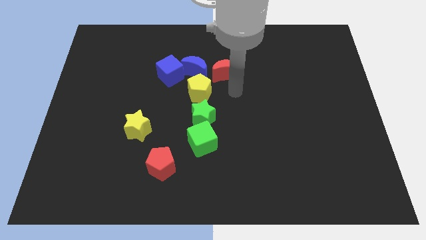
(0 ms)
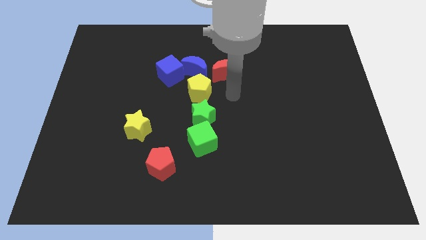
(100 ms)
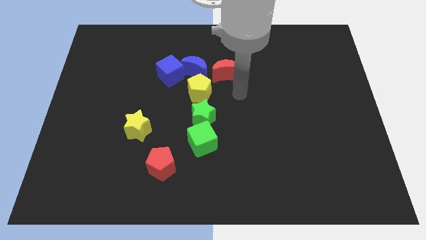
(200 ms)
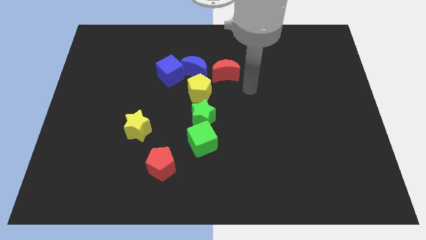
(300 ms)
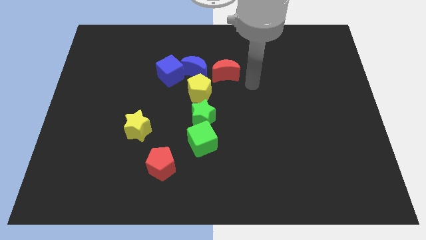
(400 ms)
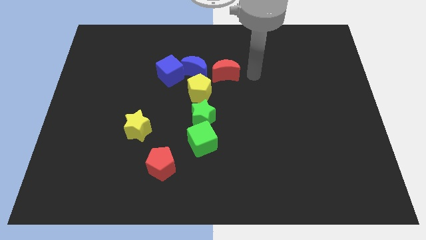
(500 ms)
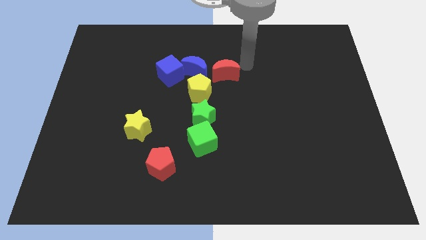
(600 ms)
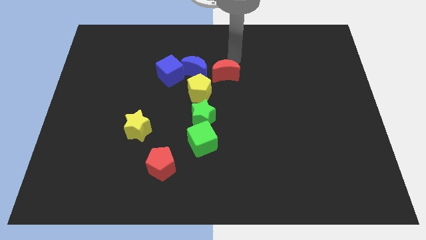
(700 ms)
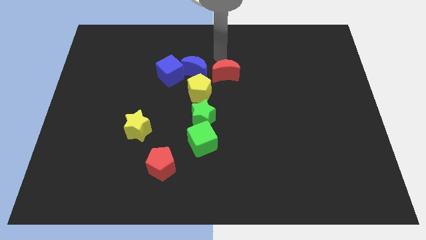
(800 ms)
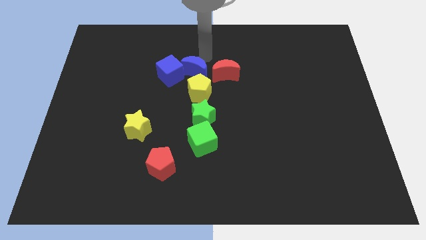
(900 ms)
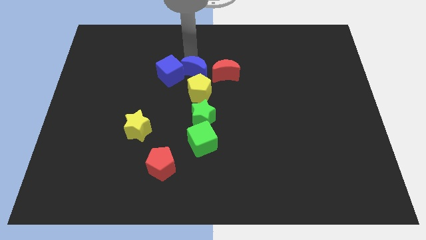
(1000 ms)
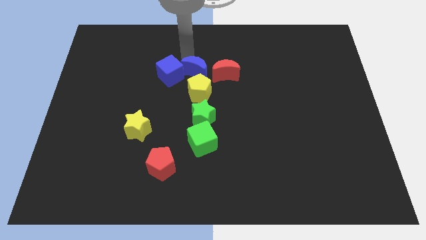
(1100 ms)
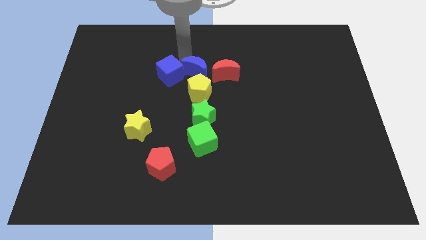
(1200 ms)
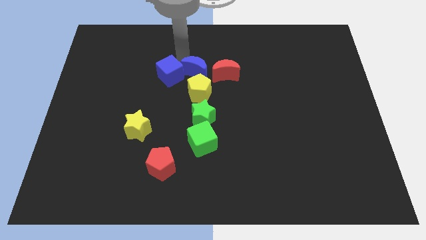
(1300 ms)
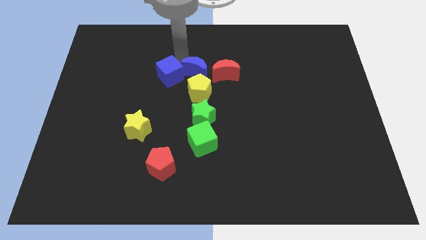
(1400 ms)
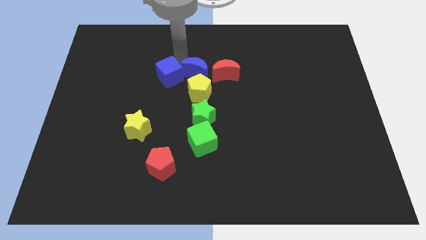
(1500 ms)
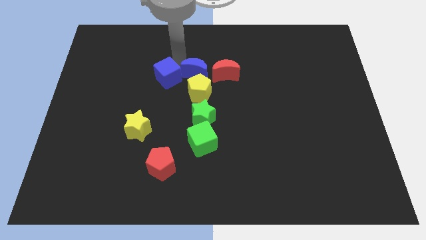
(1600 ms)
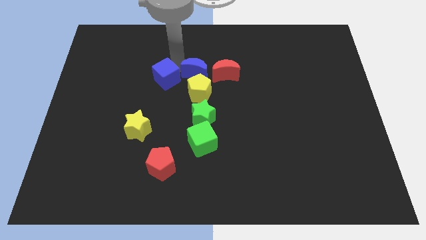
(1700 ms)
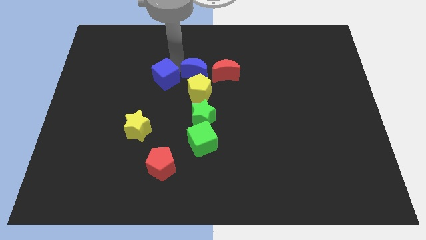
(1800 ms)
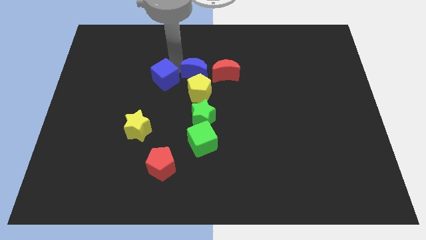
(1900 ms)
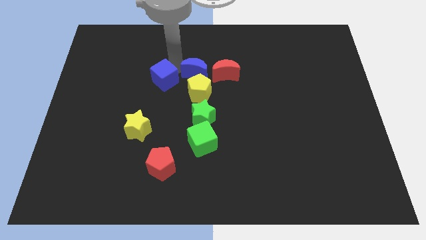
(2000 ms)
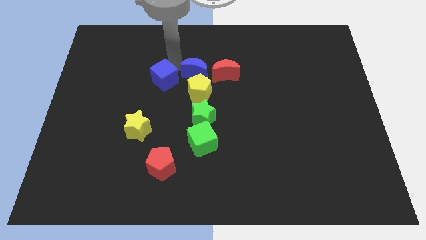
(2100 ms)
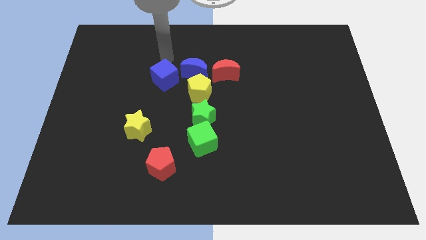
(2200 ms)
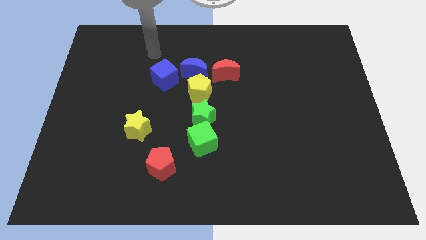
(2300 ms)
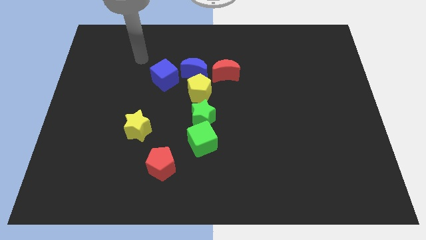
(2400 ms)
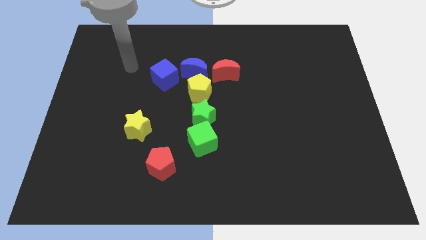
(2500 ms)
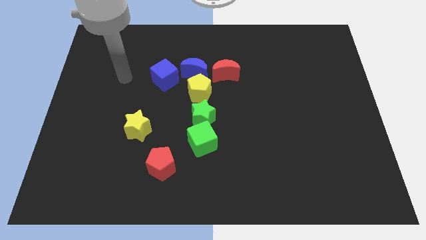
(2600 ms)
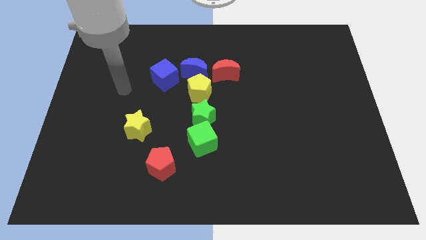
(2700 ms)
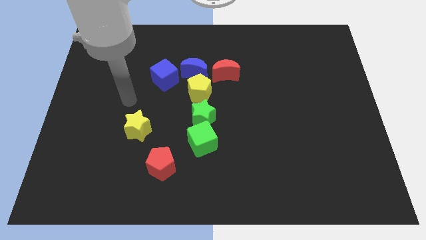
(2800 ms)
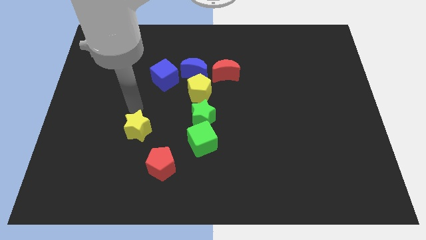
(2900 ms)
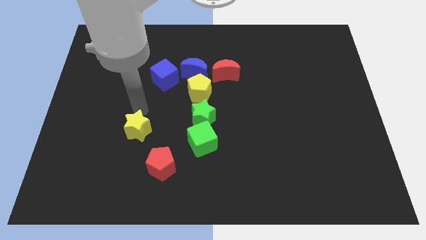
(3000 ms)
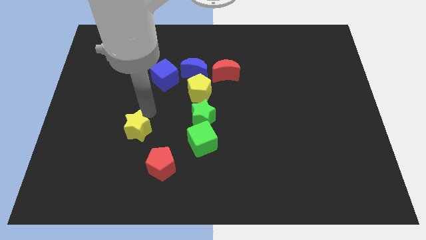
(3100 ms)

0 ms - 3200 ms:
slightly push the blue blocks towards the bottom side of the board

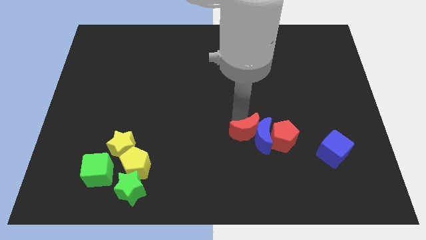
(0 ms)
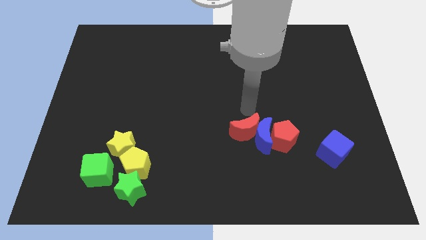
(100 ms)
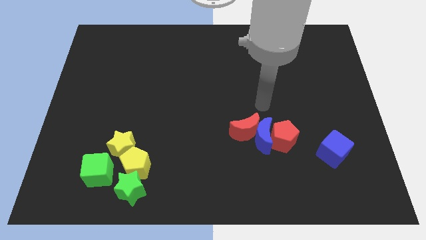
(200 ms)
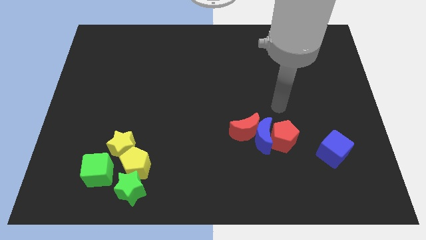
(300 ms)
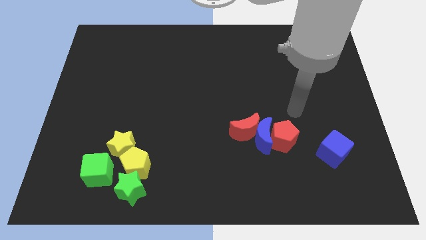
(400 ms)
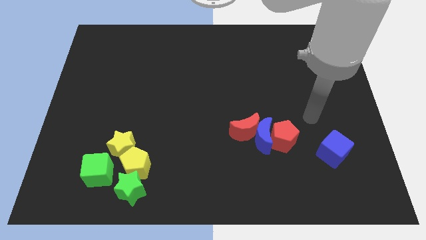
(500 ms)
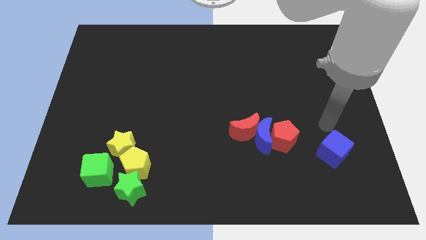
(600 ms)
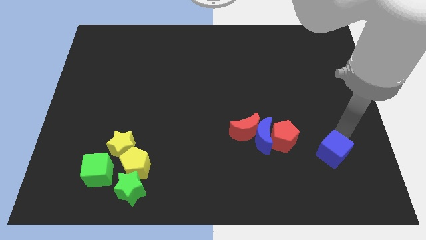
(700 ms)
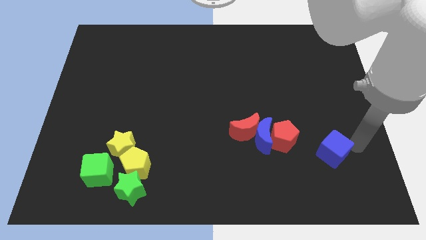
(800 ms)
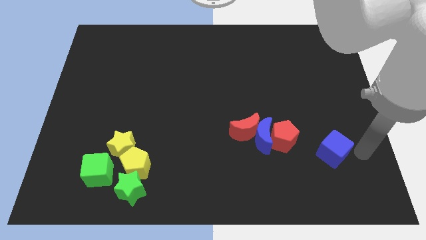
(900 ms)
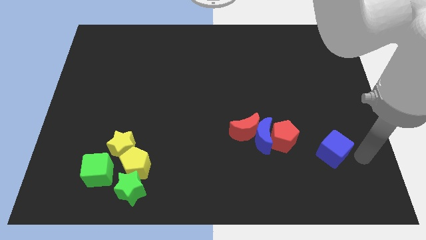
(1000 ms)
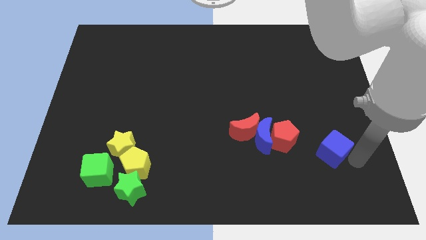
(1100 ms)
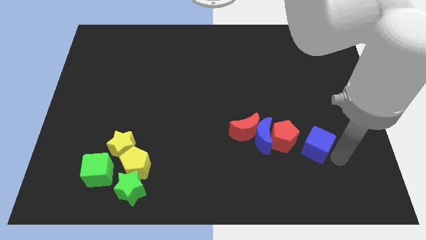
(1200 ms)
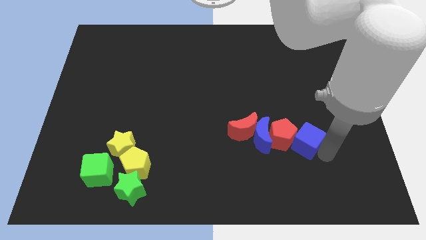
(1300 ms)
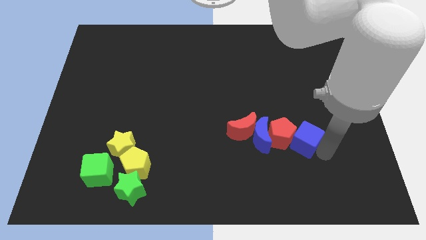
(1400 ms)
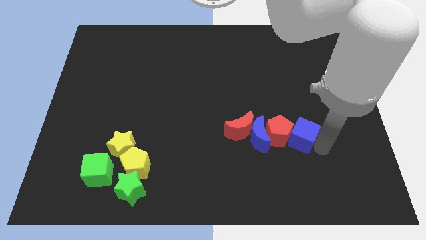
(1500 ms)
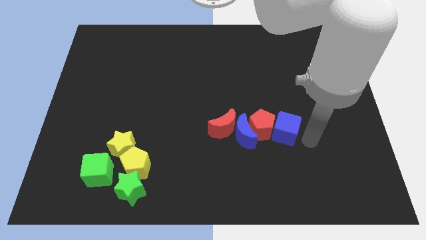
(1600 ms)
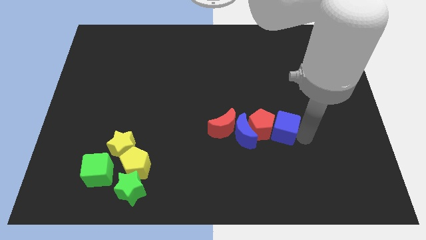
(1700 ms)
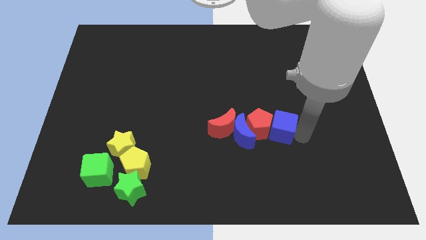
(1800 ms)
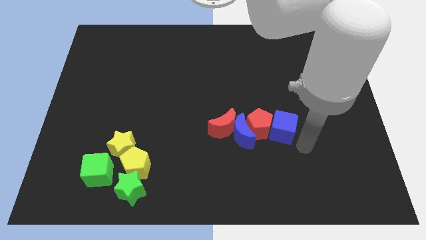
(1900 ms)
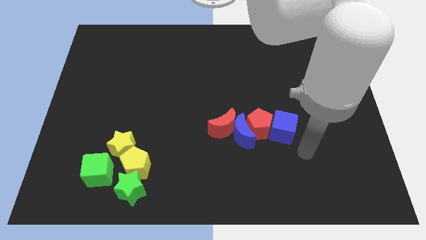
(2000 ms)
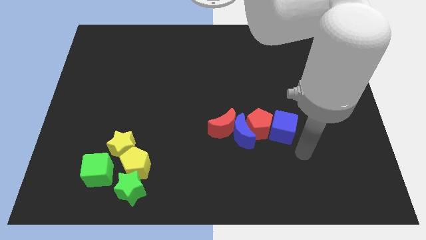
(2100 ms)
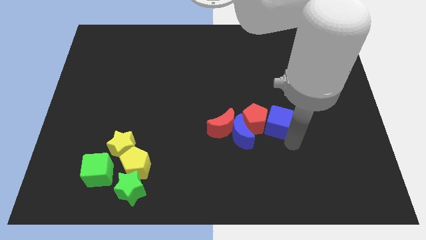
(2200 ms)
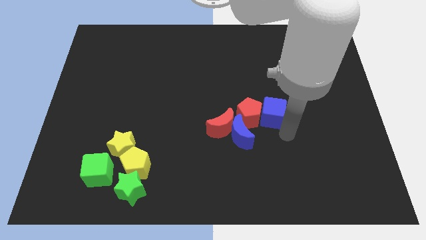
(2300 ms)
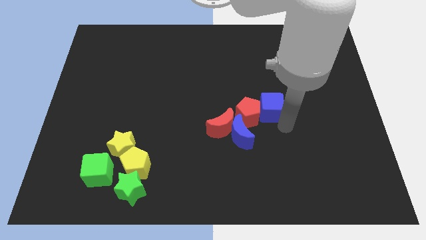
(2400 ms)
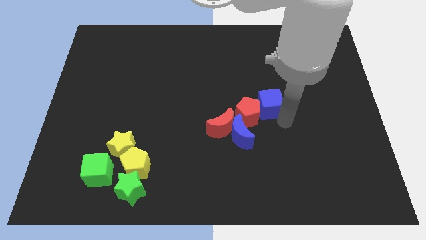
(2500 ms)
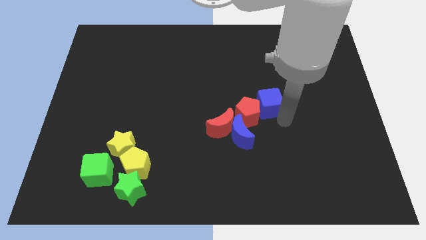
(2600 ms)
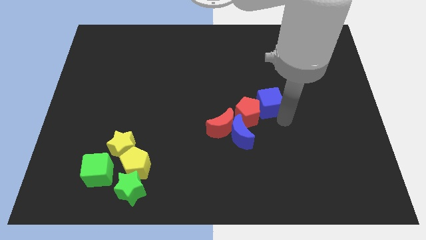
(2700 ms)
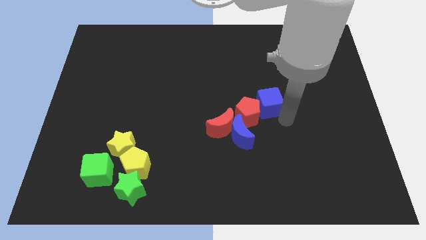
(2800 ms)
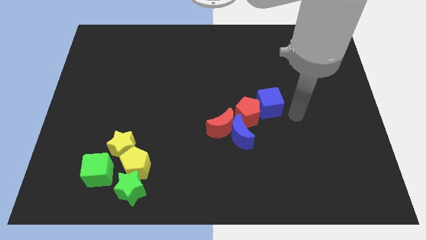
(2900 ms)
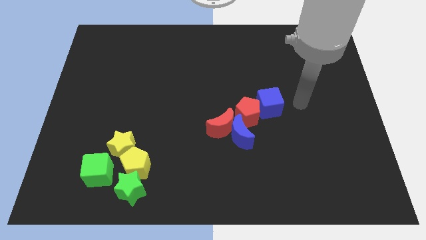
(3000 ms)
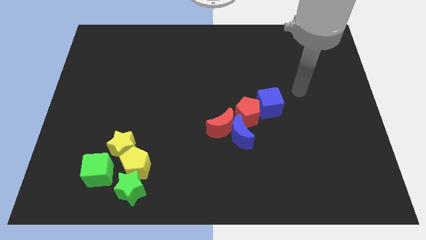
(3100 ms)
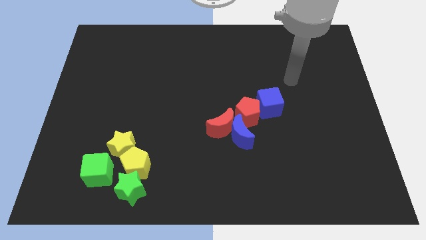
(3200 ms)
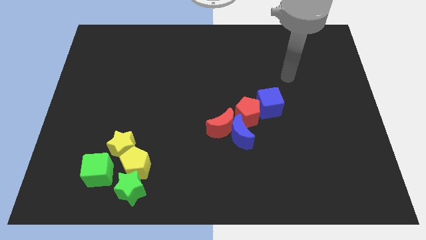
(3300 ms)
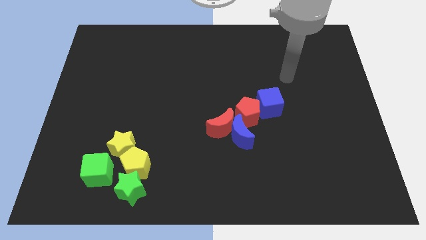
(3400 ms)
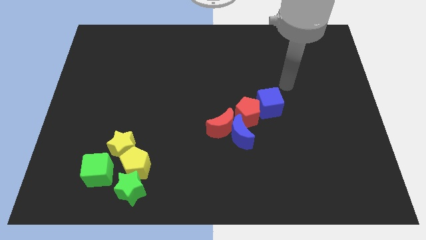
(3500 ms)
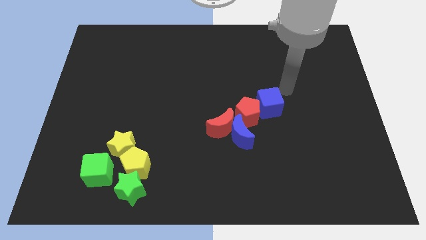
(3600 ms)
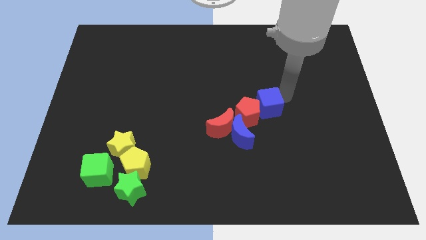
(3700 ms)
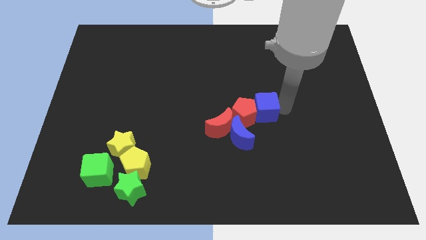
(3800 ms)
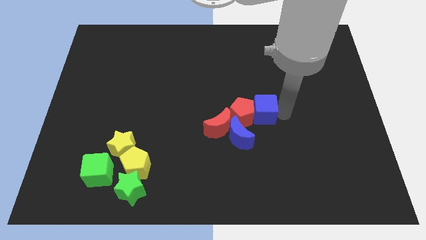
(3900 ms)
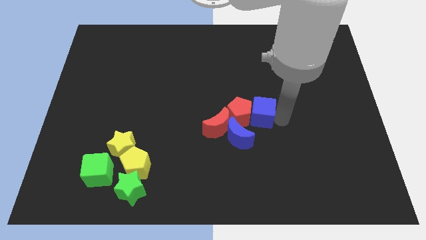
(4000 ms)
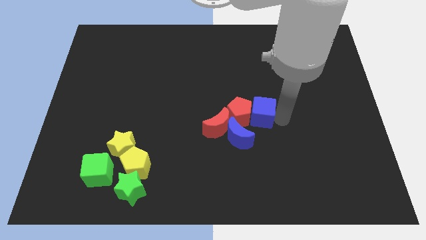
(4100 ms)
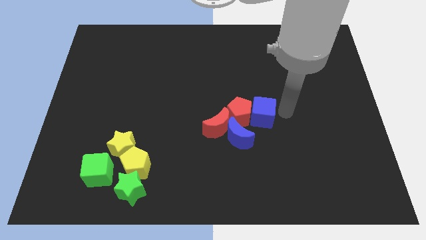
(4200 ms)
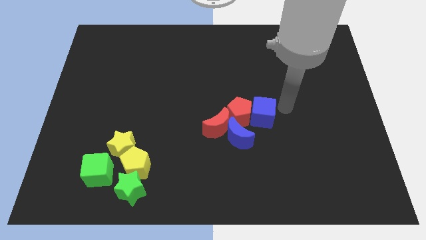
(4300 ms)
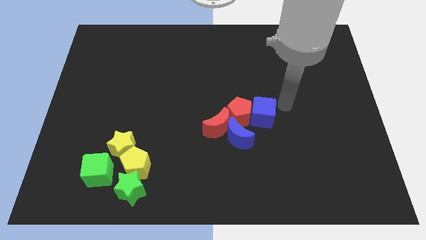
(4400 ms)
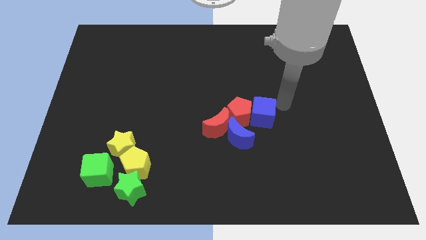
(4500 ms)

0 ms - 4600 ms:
adjust the blue cube with red blocks and blue crescent

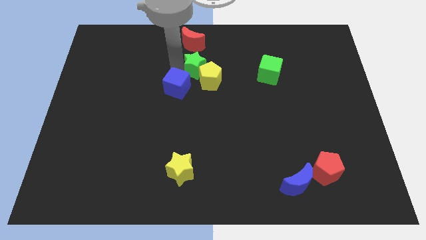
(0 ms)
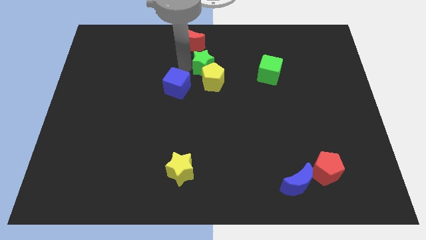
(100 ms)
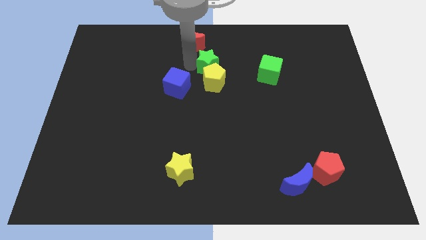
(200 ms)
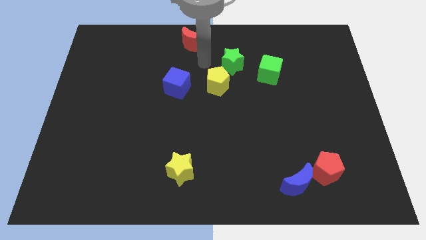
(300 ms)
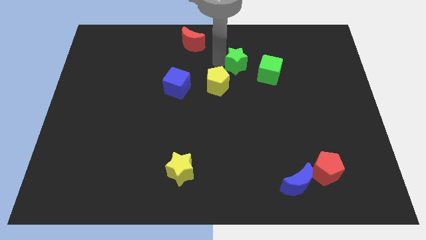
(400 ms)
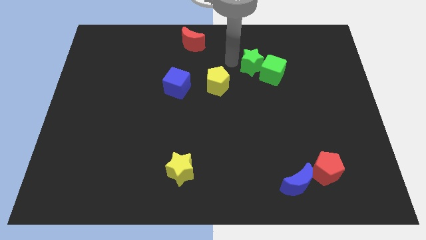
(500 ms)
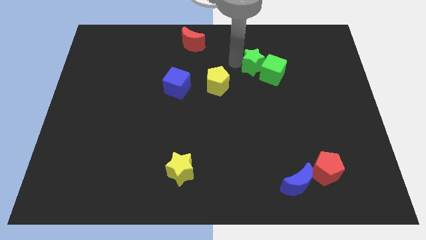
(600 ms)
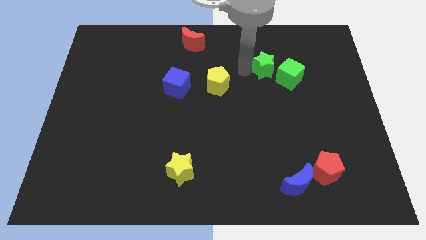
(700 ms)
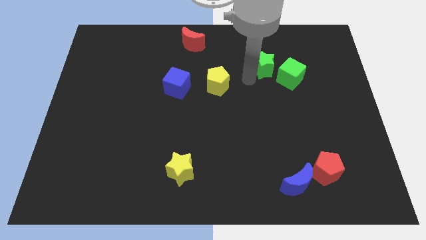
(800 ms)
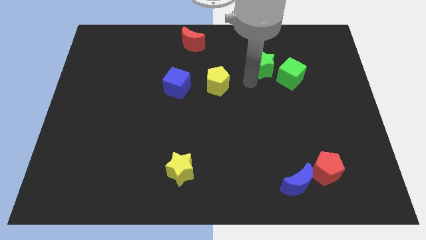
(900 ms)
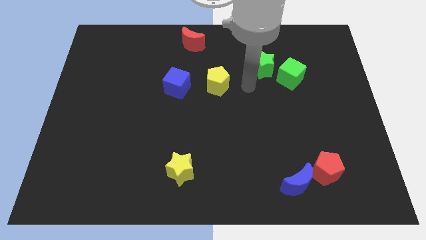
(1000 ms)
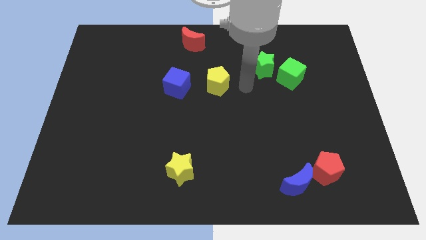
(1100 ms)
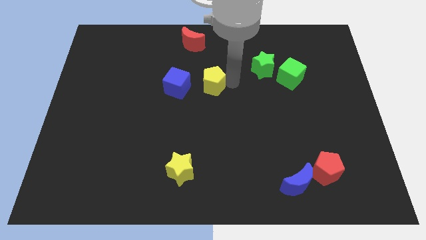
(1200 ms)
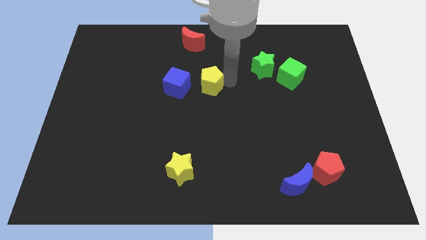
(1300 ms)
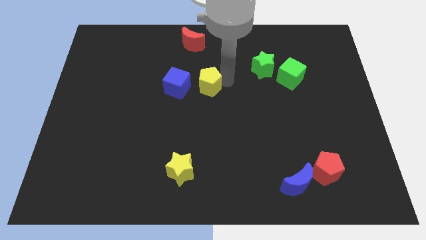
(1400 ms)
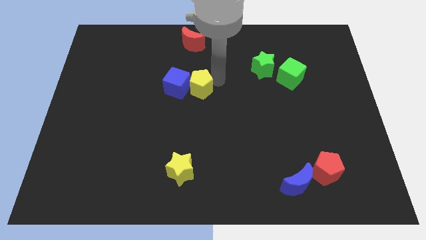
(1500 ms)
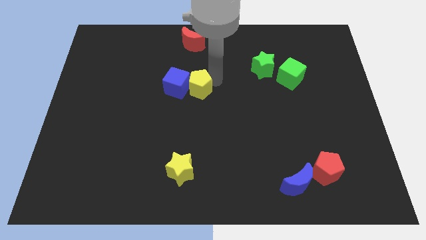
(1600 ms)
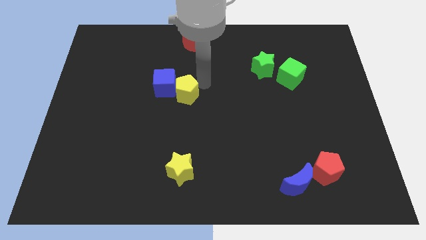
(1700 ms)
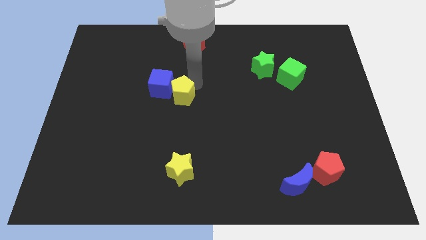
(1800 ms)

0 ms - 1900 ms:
move the green star towards right side
